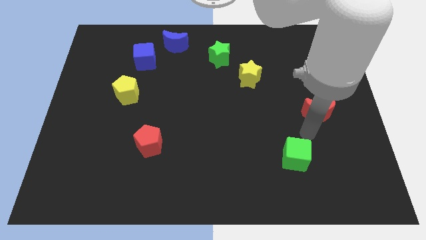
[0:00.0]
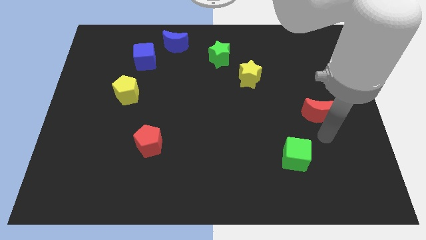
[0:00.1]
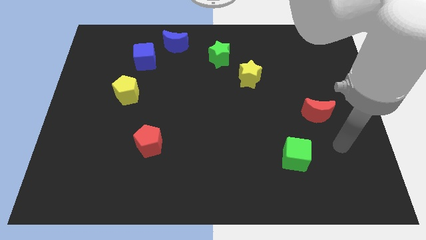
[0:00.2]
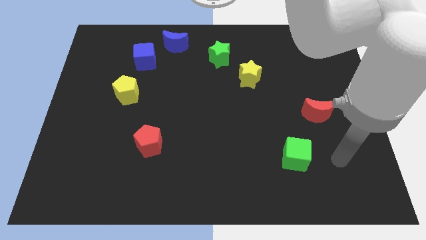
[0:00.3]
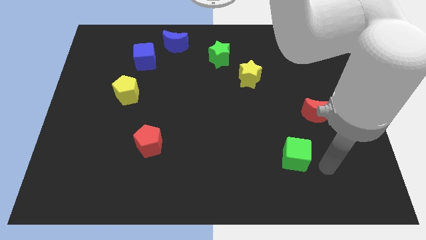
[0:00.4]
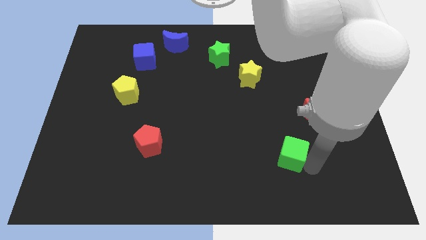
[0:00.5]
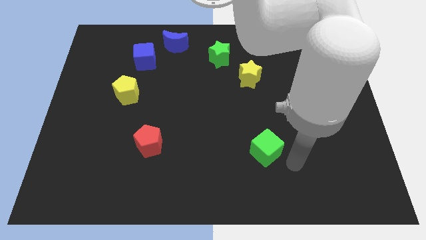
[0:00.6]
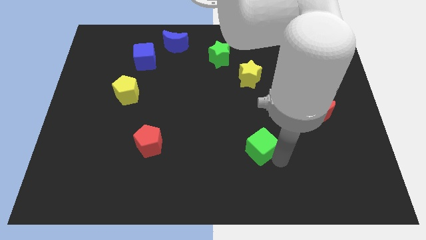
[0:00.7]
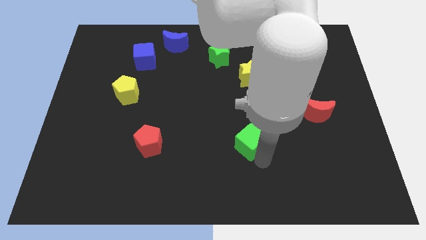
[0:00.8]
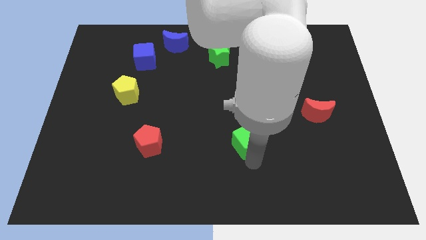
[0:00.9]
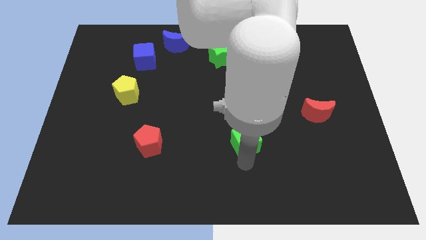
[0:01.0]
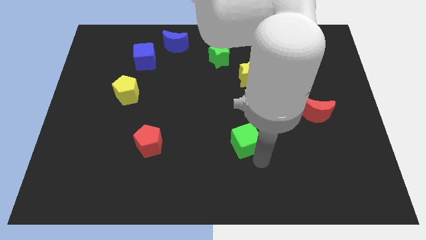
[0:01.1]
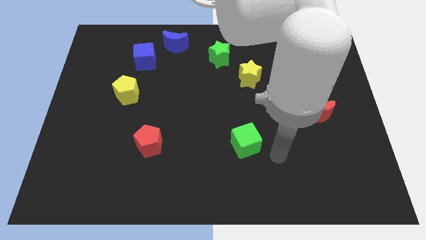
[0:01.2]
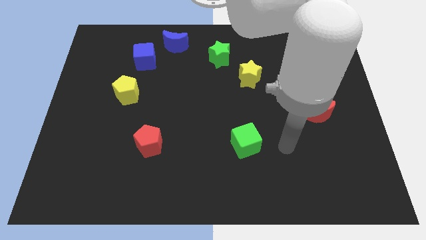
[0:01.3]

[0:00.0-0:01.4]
push green cube horizontally

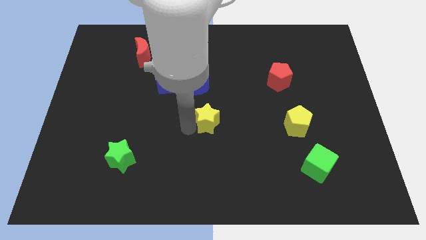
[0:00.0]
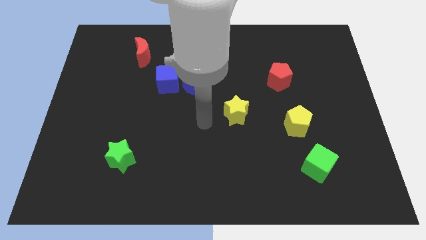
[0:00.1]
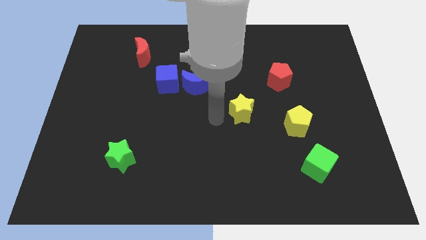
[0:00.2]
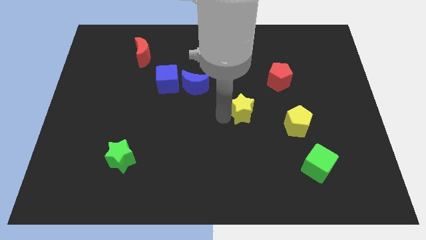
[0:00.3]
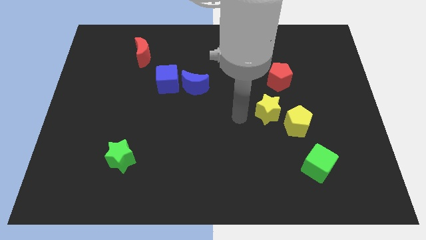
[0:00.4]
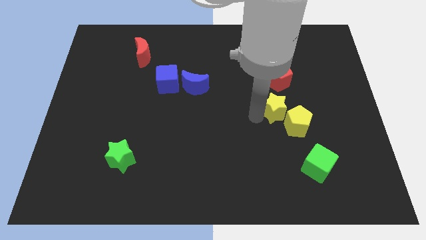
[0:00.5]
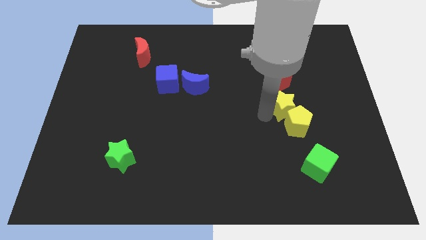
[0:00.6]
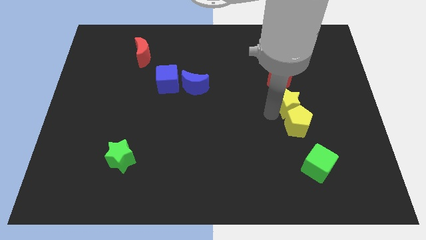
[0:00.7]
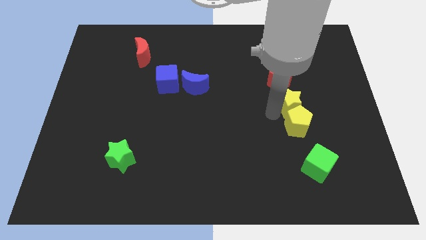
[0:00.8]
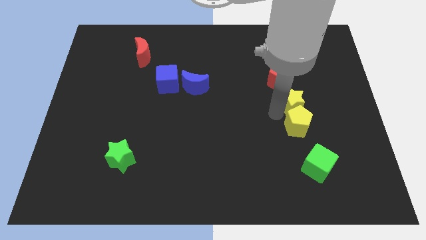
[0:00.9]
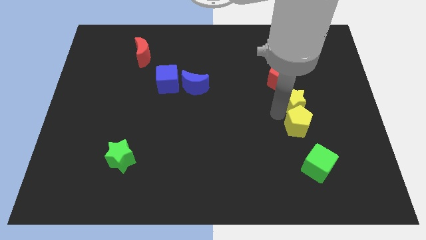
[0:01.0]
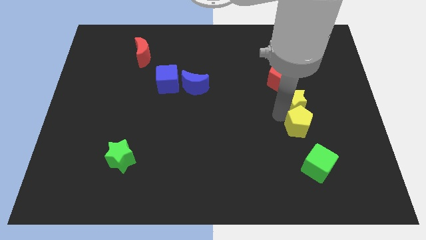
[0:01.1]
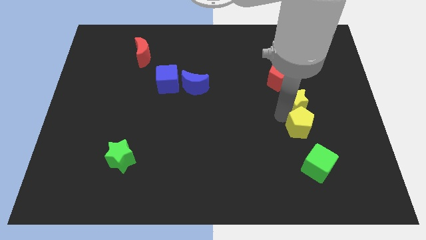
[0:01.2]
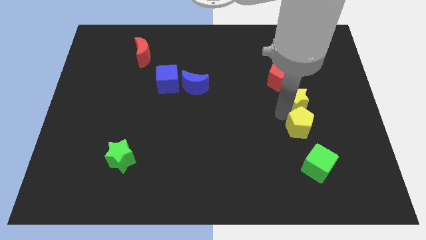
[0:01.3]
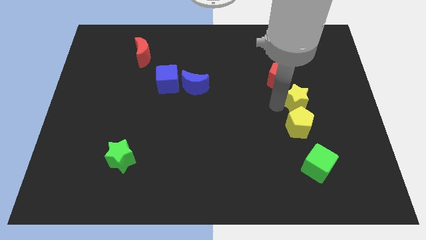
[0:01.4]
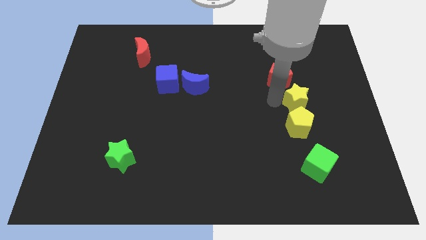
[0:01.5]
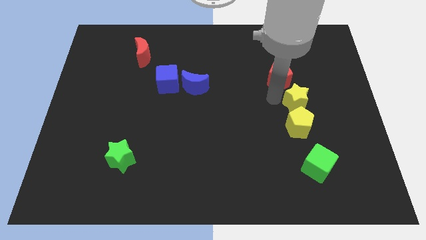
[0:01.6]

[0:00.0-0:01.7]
place the yellow star in between red pentagon and yellow pentagon

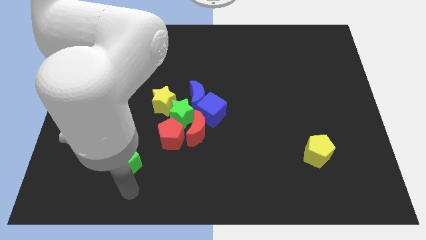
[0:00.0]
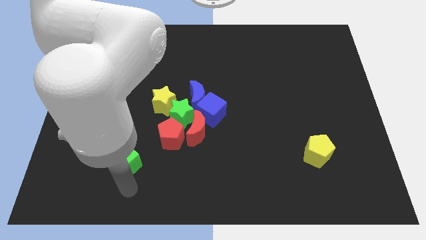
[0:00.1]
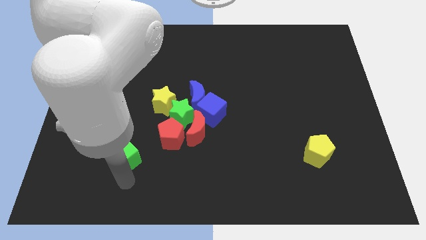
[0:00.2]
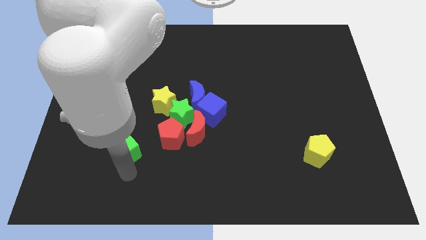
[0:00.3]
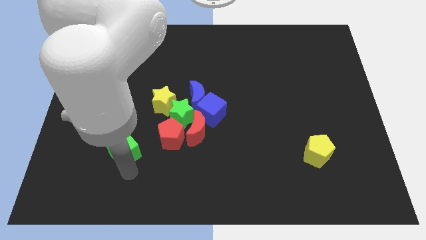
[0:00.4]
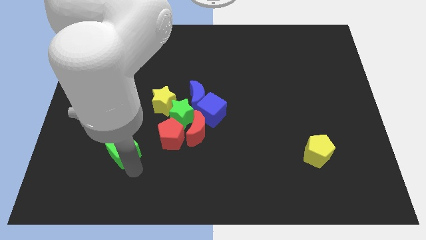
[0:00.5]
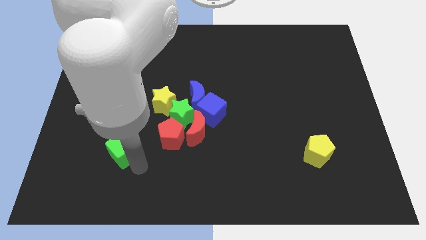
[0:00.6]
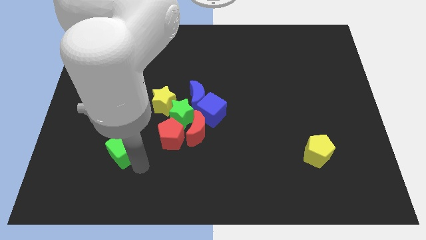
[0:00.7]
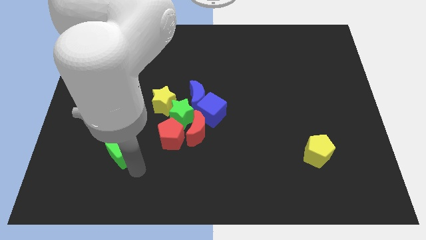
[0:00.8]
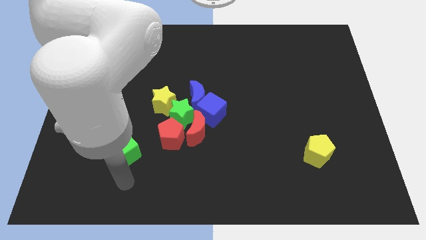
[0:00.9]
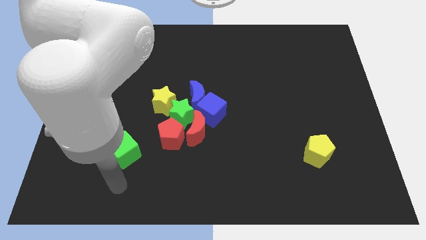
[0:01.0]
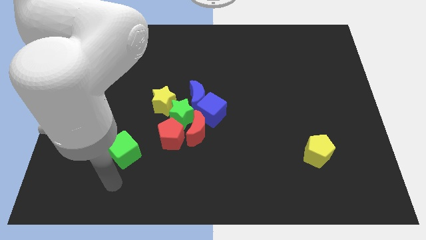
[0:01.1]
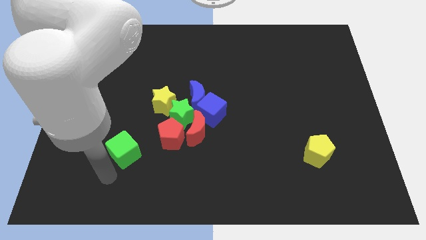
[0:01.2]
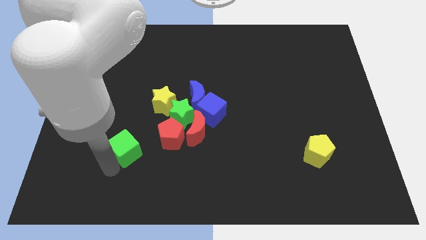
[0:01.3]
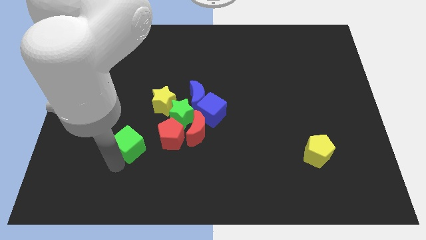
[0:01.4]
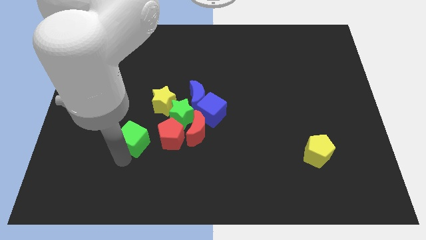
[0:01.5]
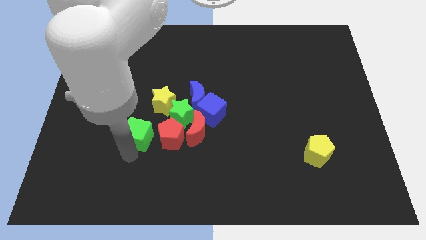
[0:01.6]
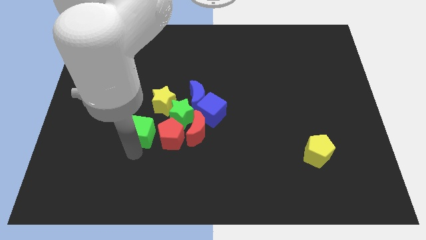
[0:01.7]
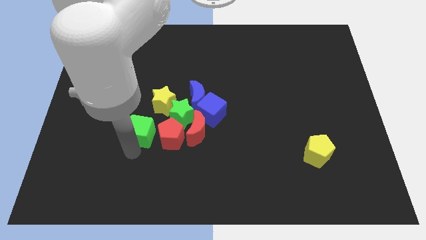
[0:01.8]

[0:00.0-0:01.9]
drag green cube to the left of red pentagon

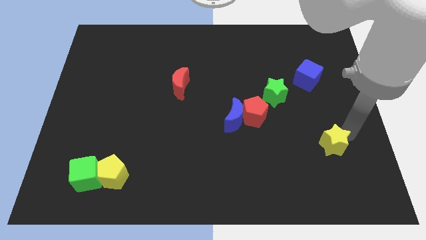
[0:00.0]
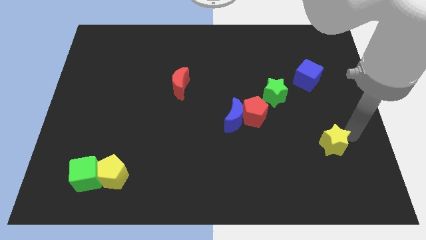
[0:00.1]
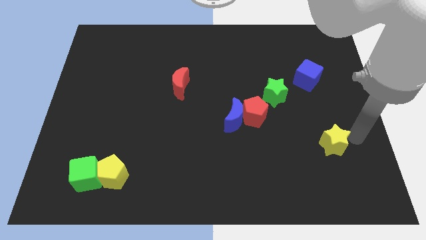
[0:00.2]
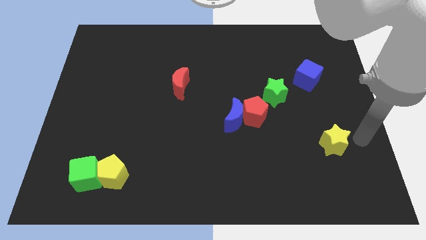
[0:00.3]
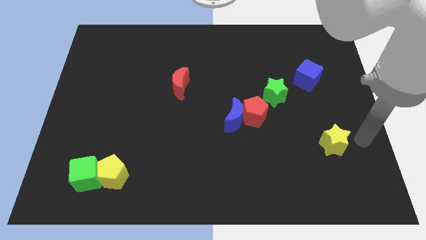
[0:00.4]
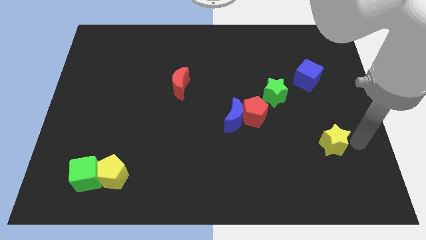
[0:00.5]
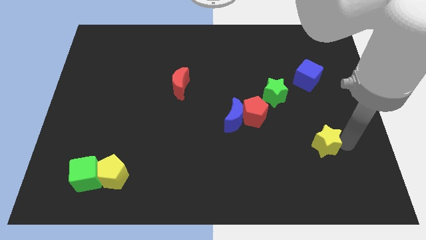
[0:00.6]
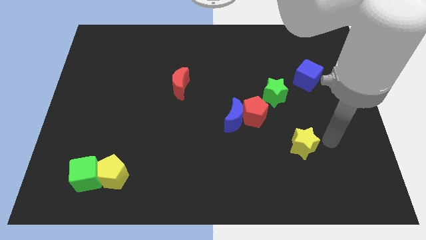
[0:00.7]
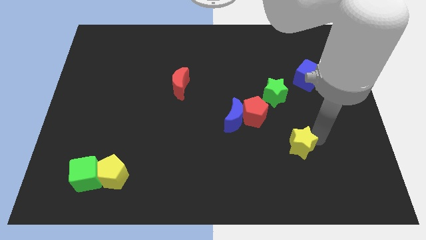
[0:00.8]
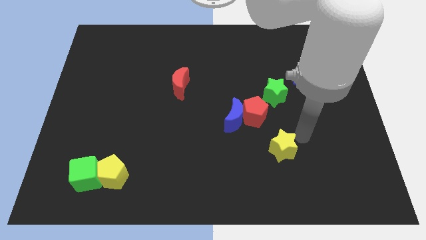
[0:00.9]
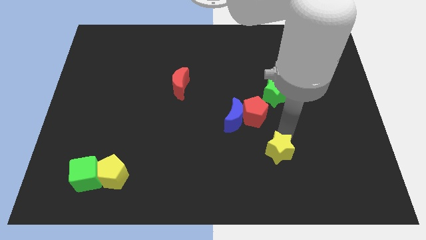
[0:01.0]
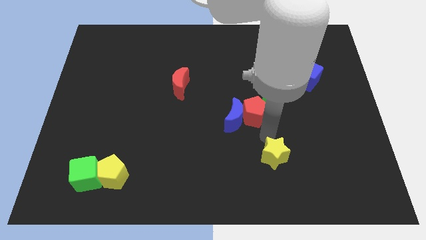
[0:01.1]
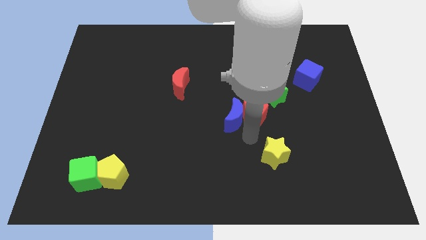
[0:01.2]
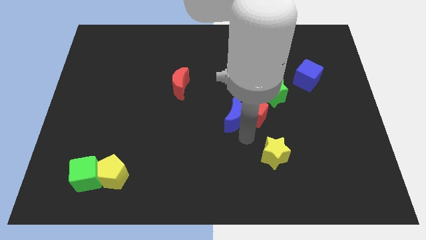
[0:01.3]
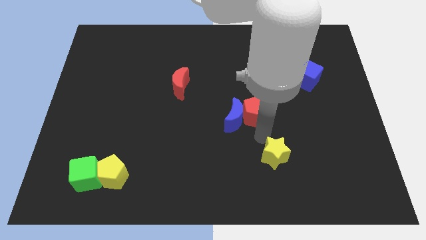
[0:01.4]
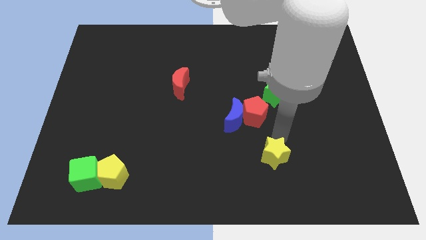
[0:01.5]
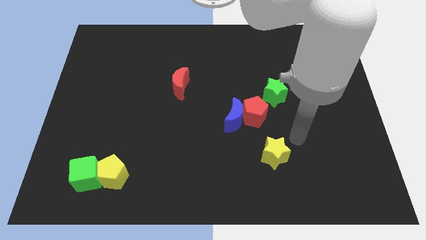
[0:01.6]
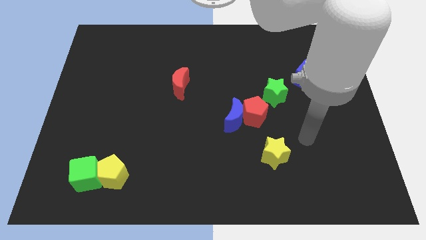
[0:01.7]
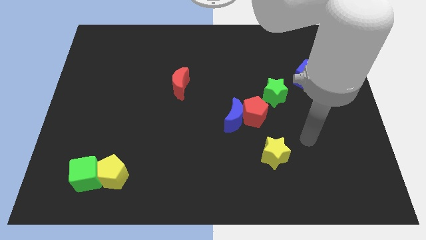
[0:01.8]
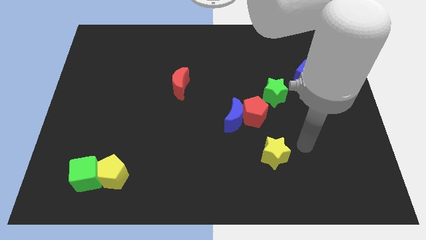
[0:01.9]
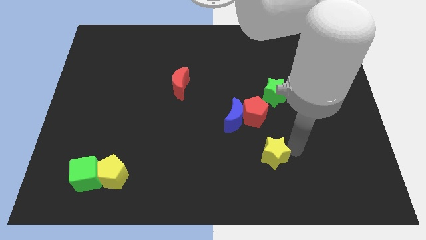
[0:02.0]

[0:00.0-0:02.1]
push yellow star below red pentagon

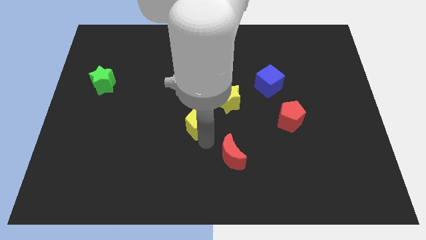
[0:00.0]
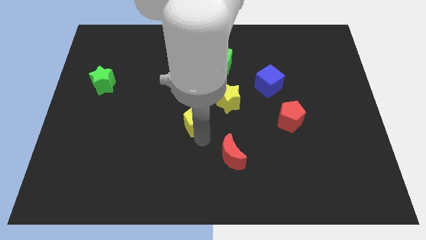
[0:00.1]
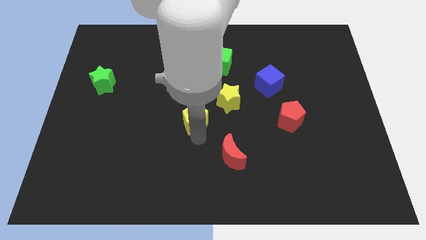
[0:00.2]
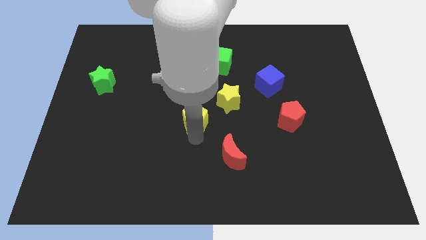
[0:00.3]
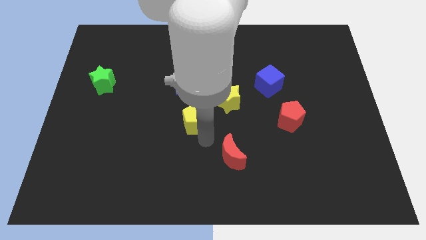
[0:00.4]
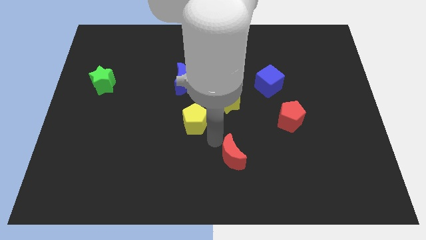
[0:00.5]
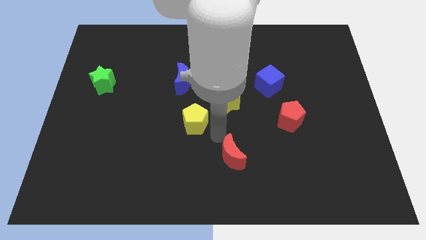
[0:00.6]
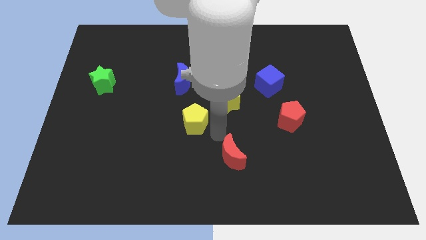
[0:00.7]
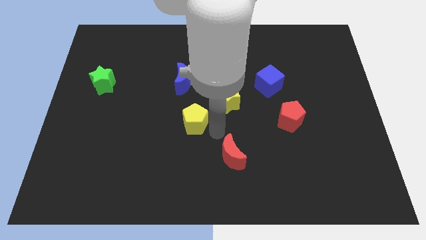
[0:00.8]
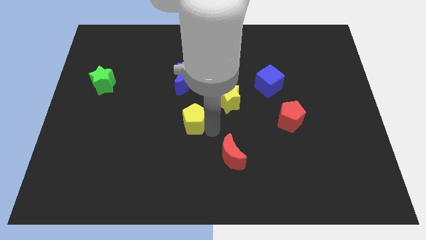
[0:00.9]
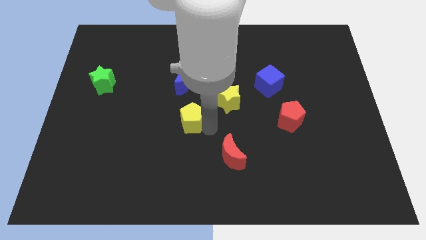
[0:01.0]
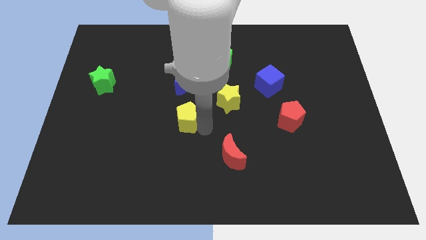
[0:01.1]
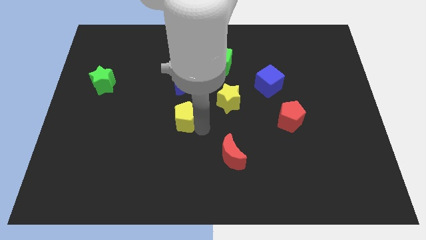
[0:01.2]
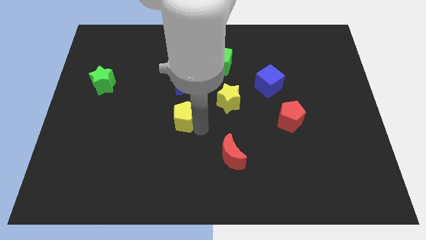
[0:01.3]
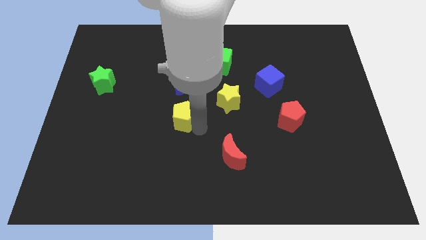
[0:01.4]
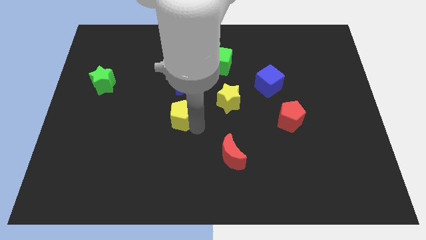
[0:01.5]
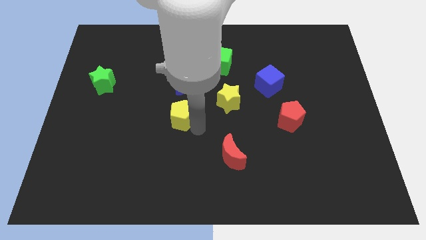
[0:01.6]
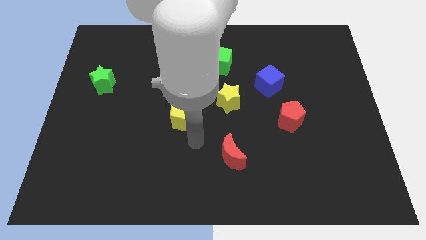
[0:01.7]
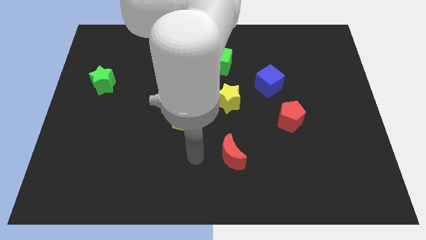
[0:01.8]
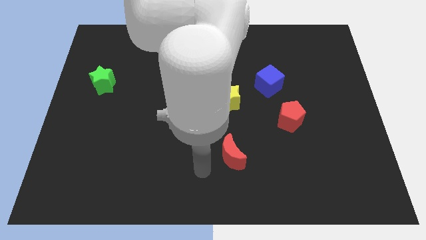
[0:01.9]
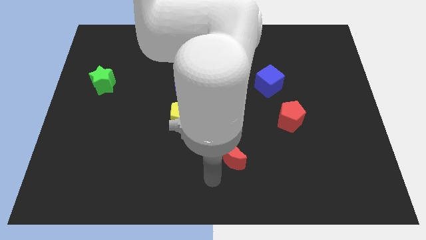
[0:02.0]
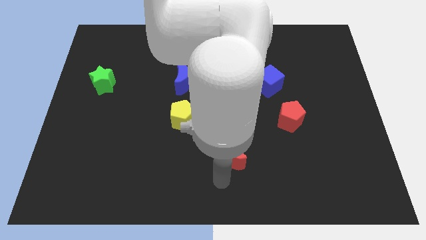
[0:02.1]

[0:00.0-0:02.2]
put the yellow pentagon below the blue moon
